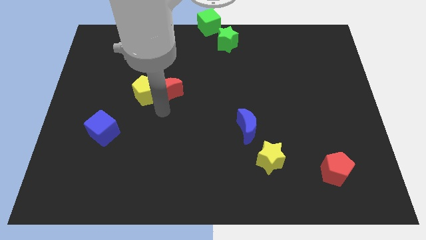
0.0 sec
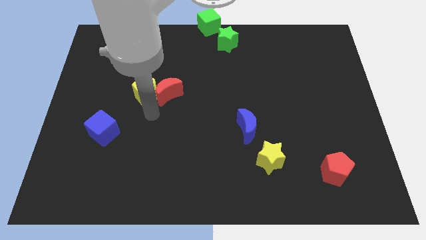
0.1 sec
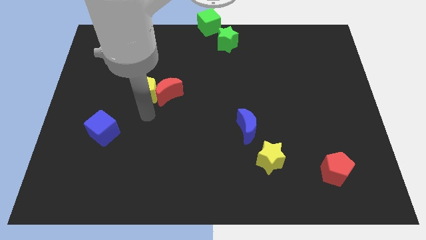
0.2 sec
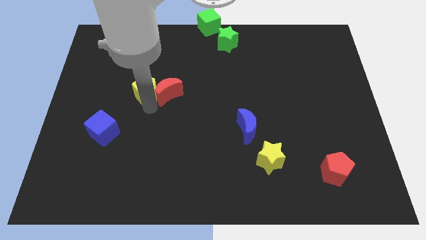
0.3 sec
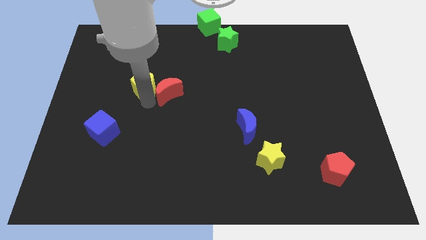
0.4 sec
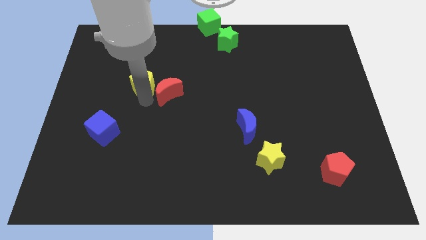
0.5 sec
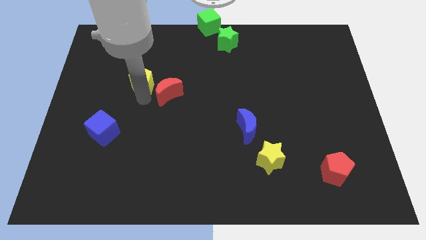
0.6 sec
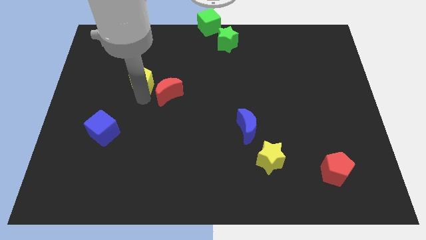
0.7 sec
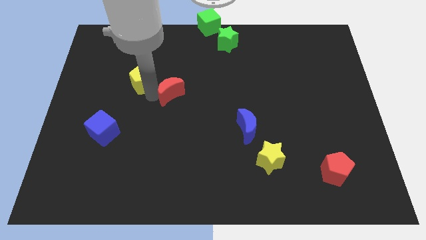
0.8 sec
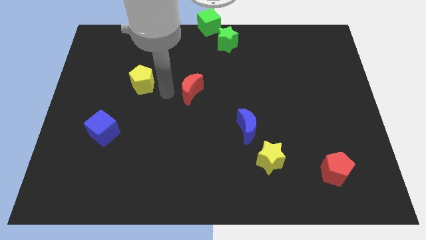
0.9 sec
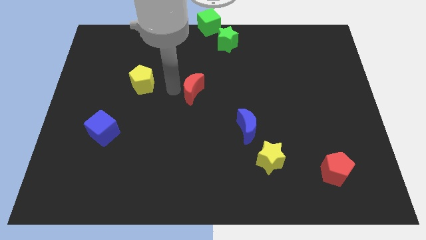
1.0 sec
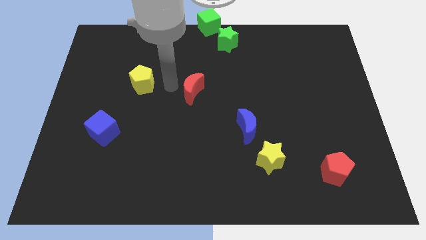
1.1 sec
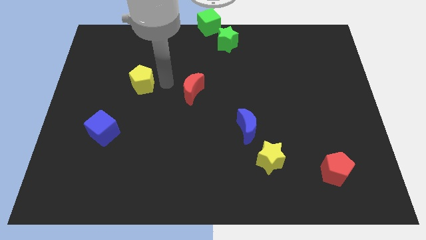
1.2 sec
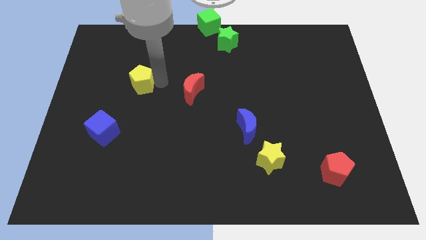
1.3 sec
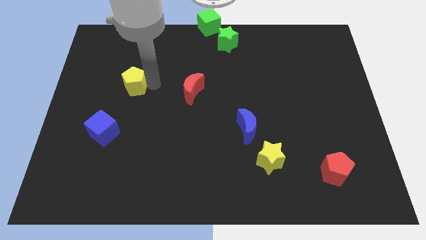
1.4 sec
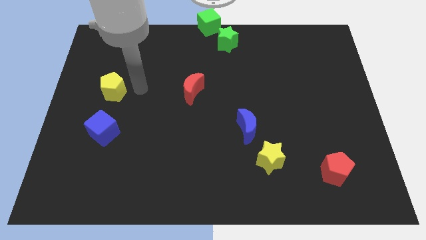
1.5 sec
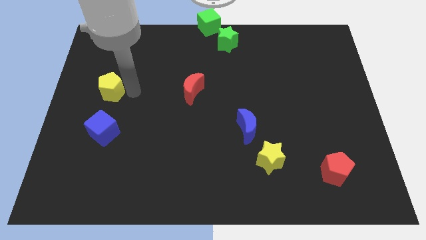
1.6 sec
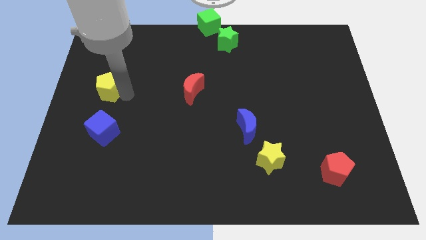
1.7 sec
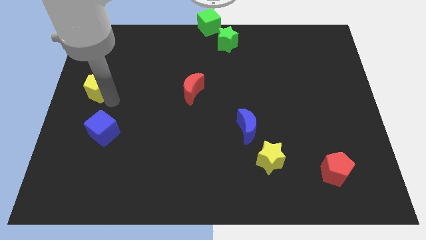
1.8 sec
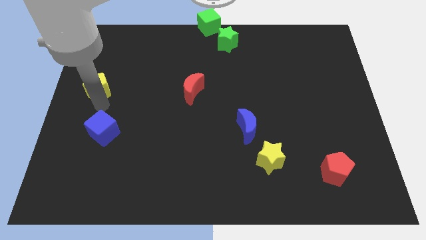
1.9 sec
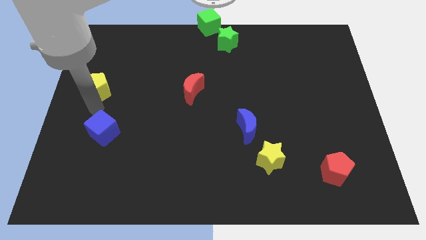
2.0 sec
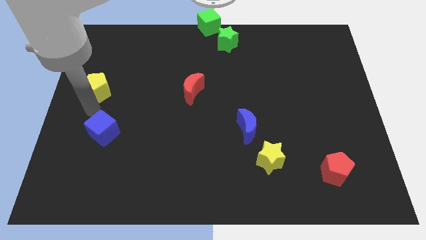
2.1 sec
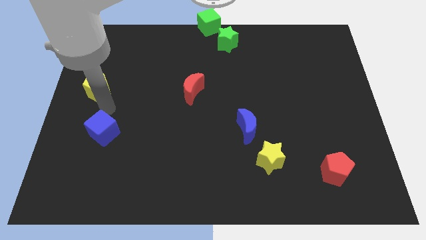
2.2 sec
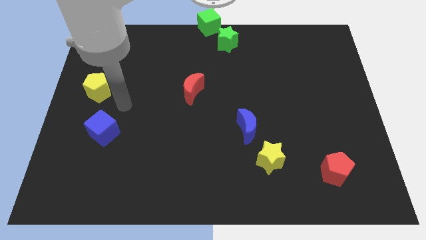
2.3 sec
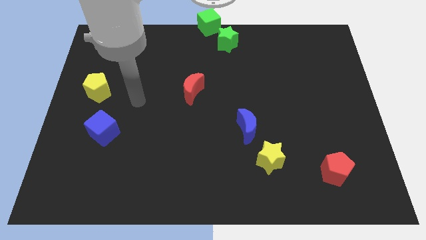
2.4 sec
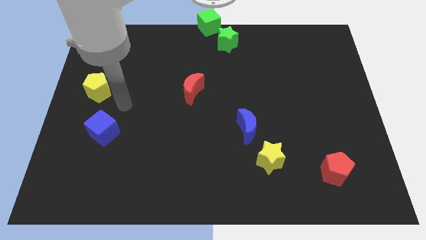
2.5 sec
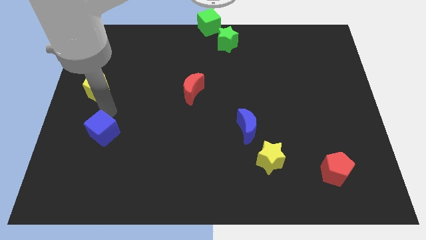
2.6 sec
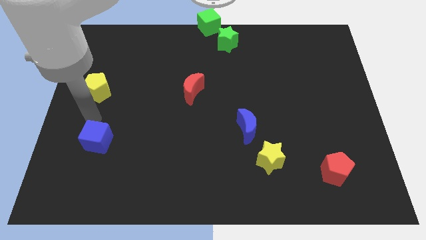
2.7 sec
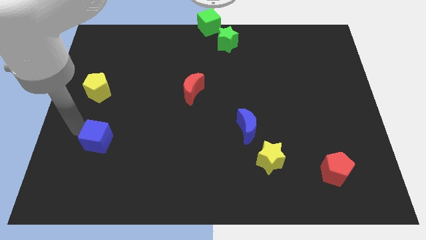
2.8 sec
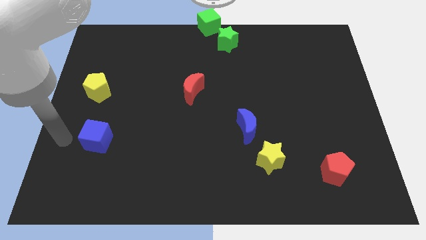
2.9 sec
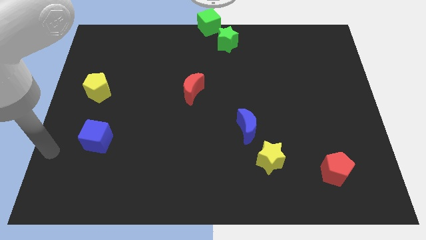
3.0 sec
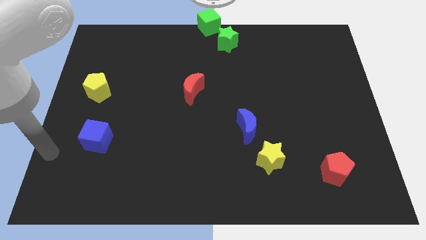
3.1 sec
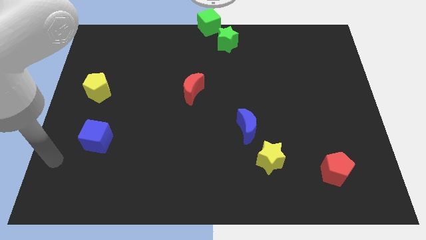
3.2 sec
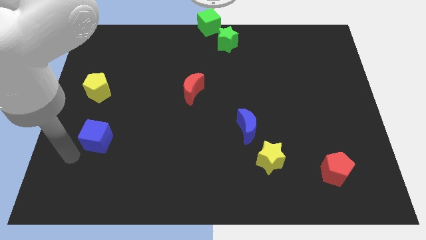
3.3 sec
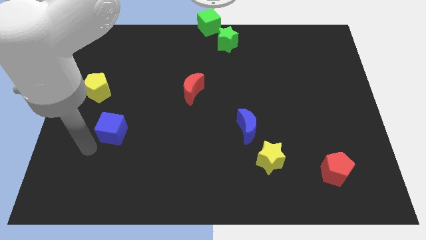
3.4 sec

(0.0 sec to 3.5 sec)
place the yellow pentagon above the blue cube

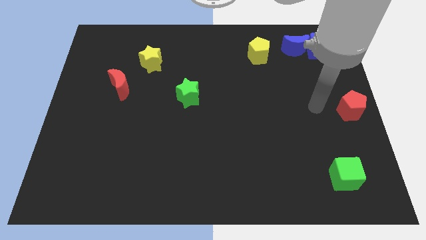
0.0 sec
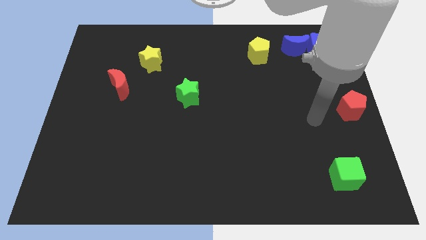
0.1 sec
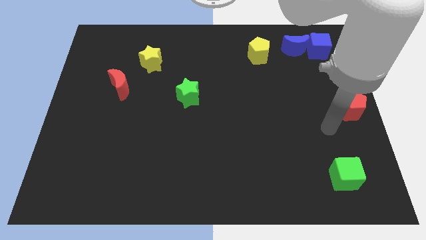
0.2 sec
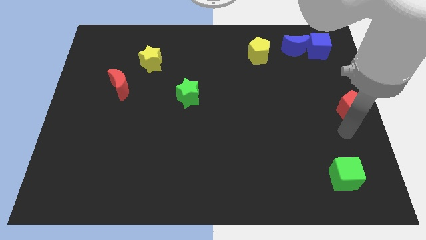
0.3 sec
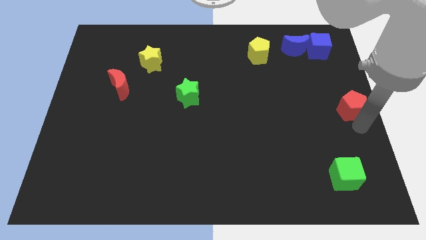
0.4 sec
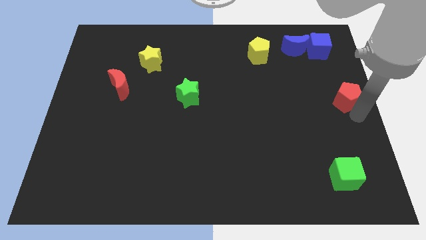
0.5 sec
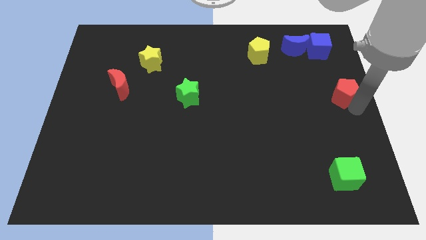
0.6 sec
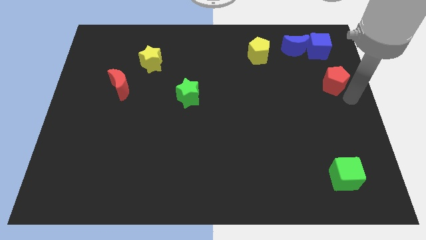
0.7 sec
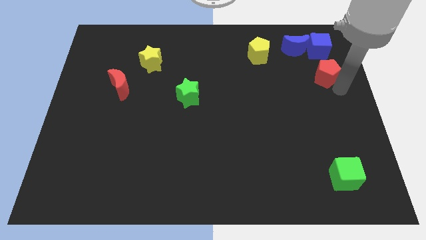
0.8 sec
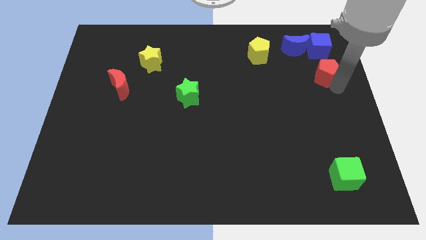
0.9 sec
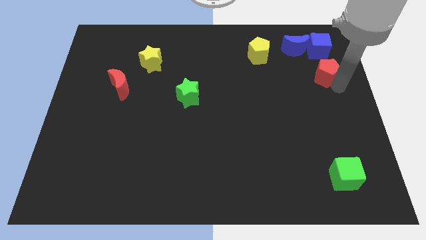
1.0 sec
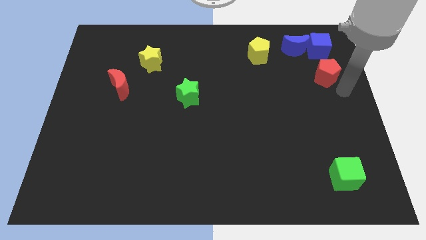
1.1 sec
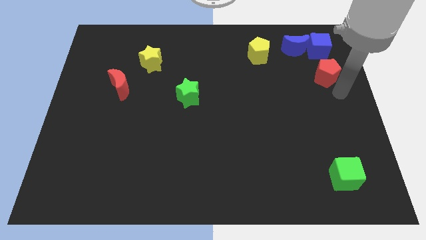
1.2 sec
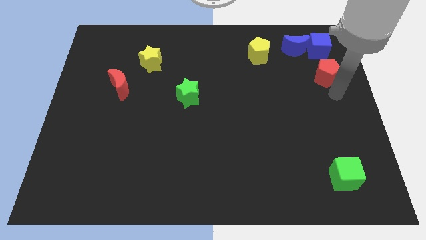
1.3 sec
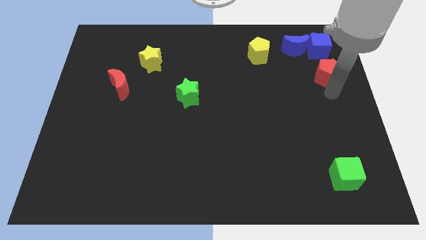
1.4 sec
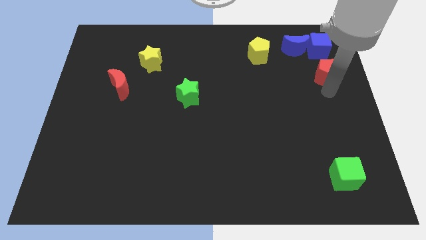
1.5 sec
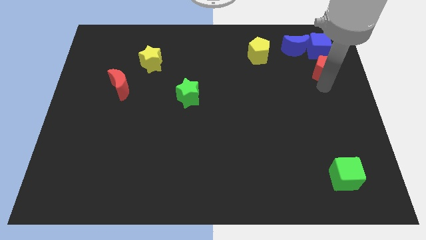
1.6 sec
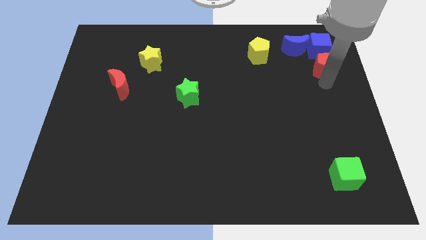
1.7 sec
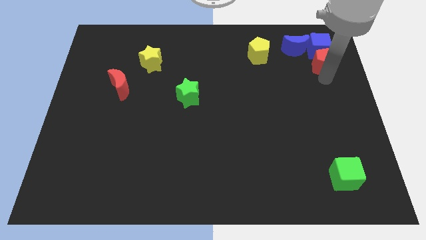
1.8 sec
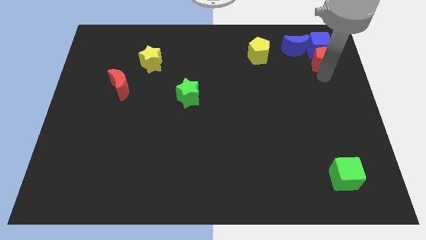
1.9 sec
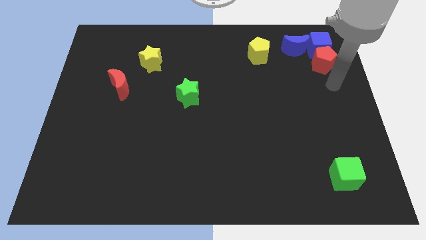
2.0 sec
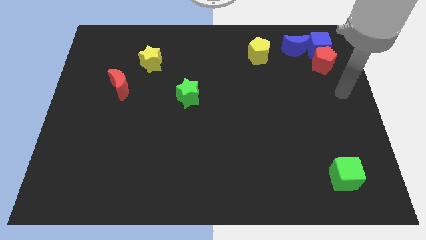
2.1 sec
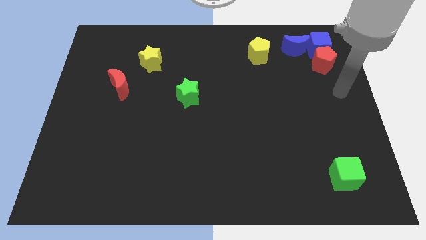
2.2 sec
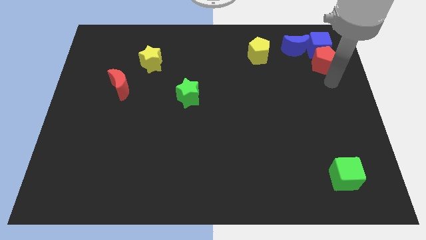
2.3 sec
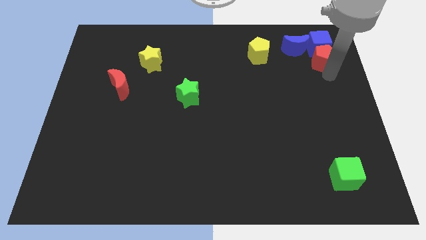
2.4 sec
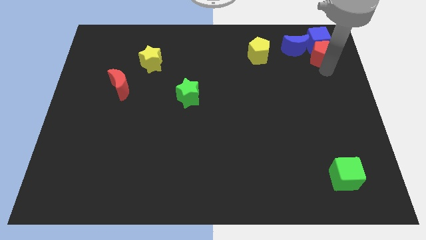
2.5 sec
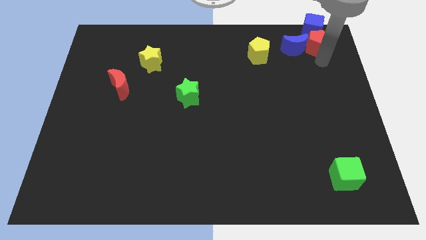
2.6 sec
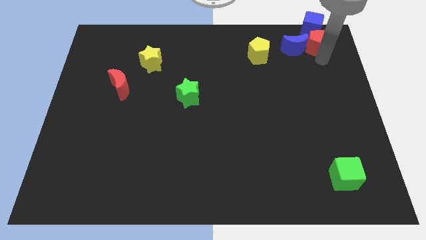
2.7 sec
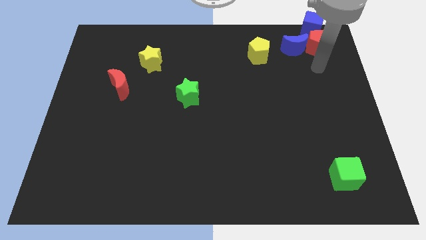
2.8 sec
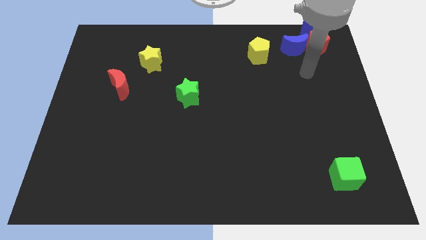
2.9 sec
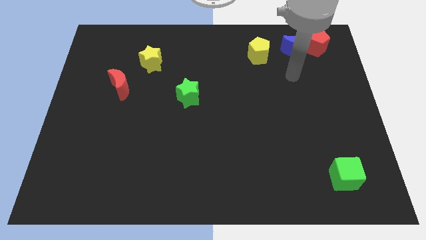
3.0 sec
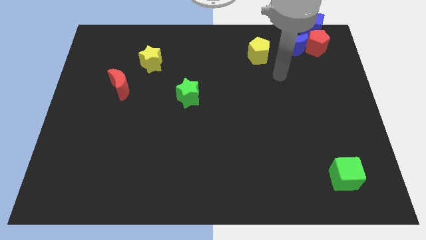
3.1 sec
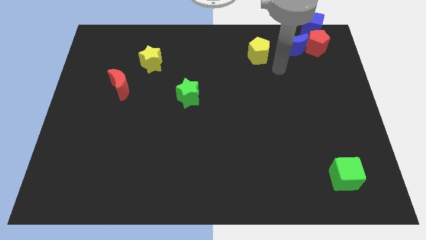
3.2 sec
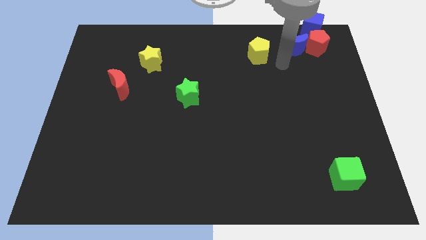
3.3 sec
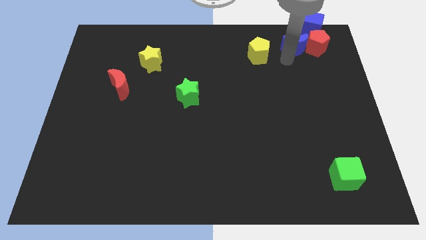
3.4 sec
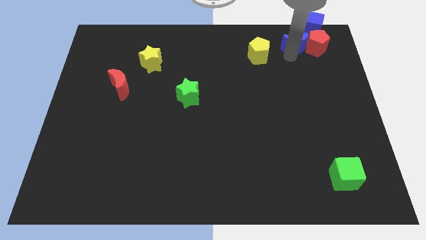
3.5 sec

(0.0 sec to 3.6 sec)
move red pentagon close to blue cube

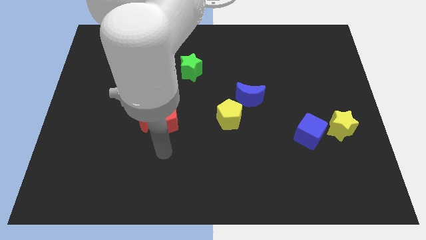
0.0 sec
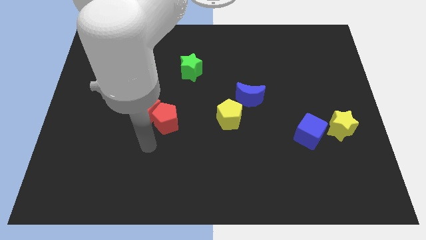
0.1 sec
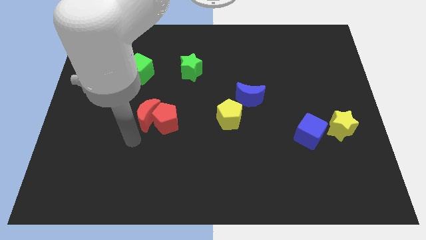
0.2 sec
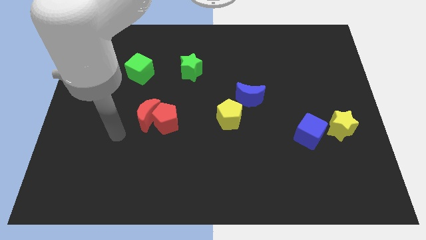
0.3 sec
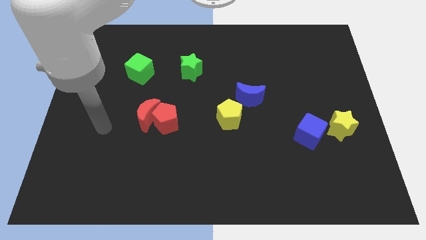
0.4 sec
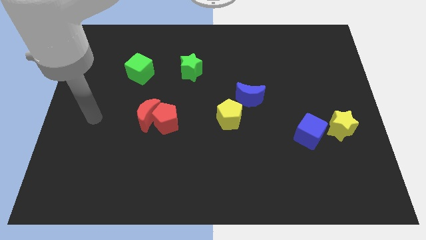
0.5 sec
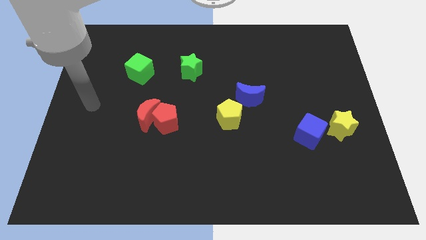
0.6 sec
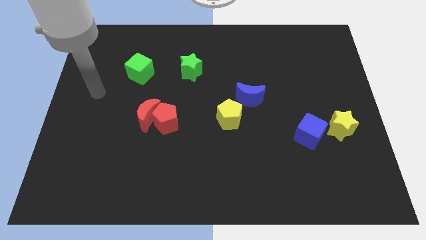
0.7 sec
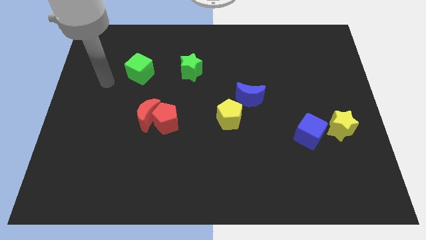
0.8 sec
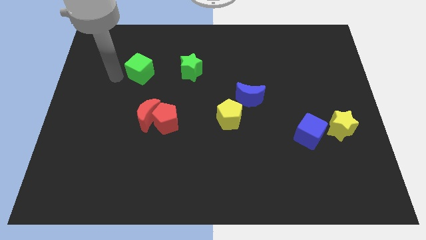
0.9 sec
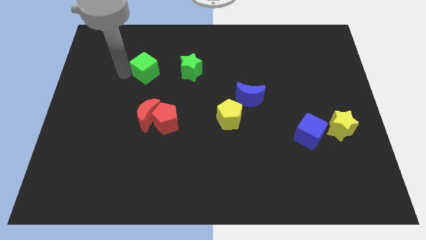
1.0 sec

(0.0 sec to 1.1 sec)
go near the green cube

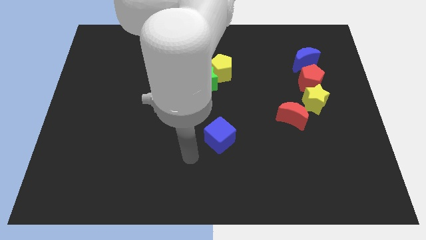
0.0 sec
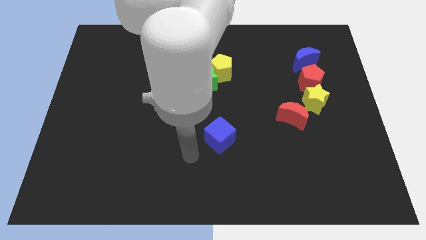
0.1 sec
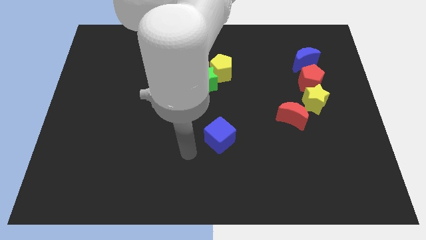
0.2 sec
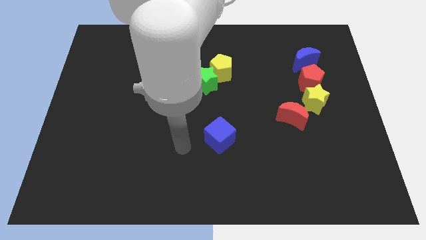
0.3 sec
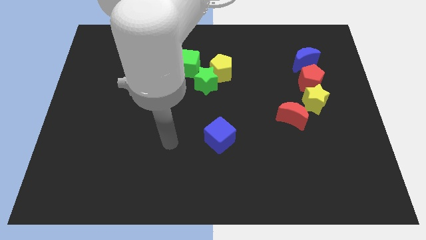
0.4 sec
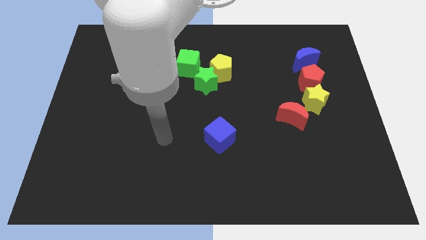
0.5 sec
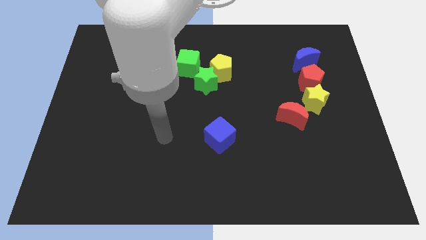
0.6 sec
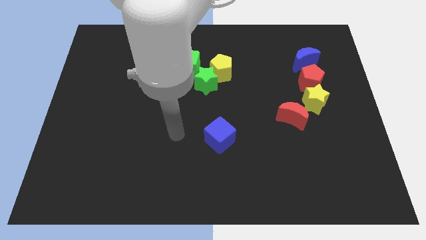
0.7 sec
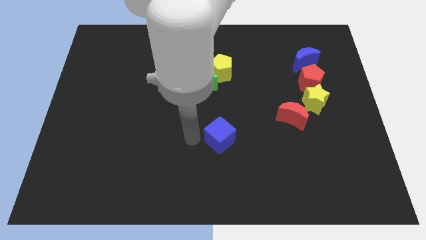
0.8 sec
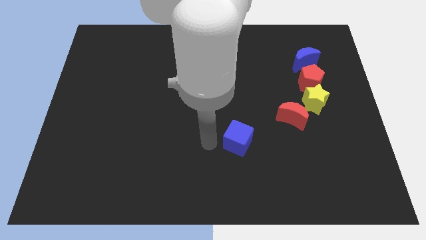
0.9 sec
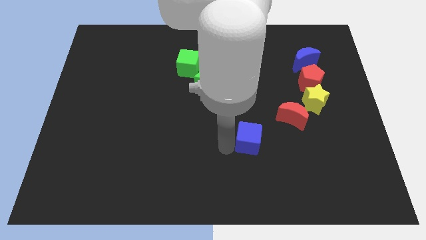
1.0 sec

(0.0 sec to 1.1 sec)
move blue cube towards red moon
